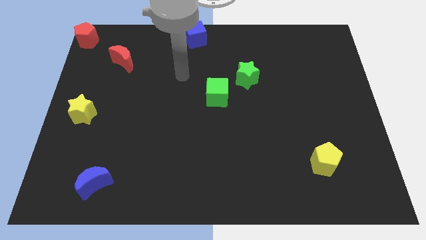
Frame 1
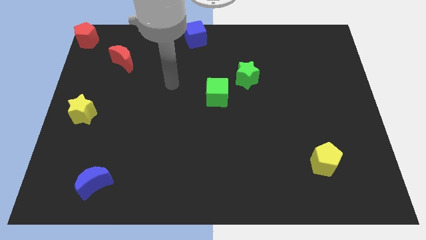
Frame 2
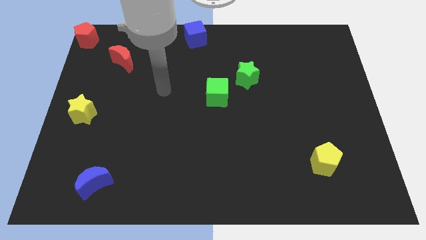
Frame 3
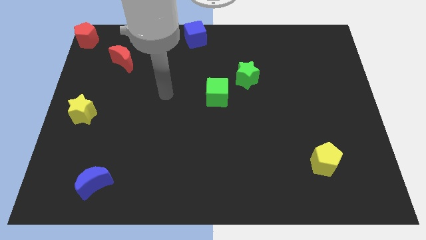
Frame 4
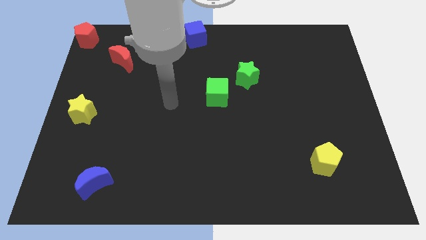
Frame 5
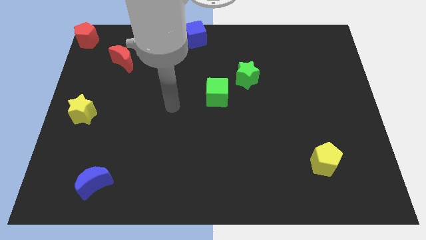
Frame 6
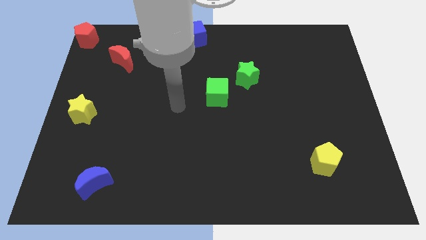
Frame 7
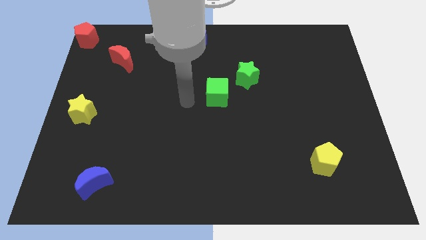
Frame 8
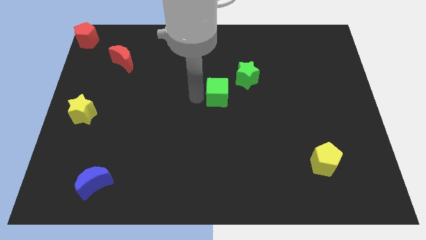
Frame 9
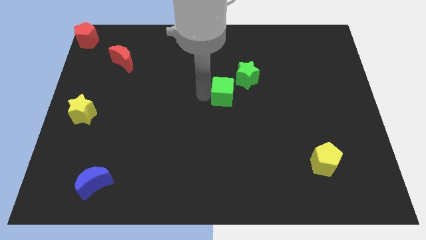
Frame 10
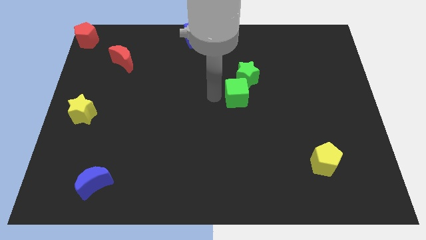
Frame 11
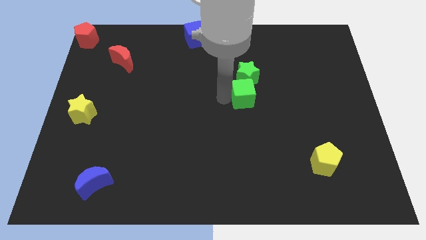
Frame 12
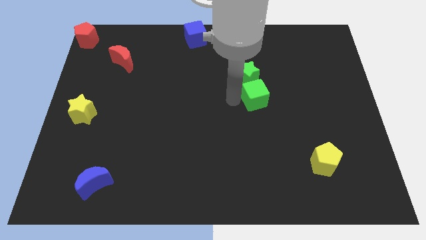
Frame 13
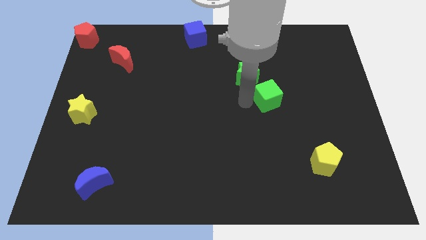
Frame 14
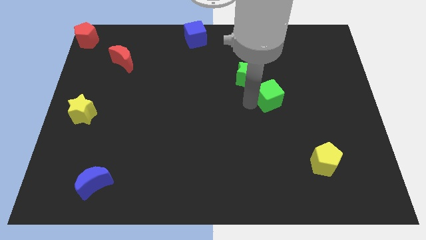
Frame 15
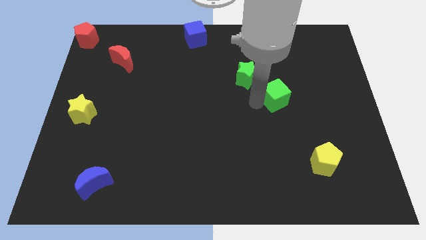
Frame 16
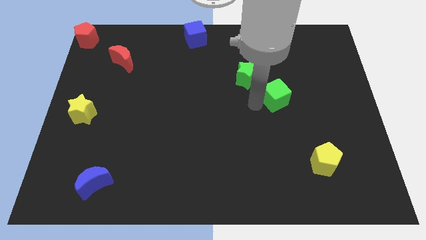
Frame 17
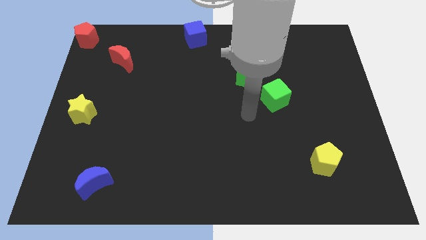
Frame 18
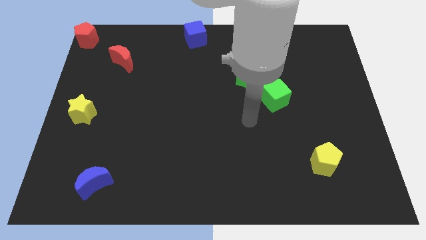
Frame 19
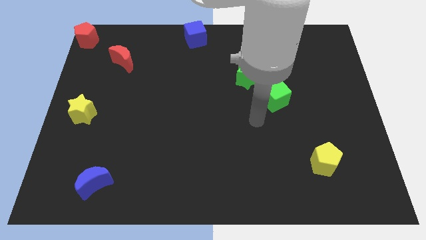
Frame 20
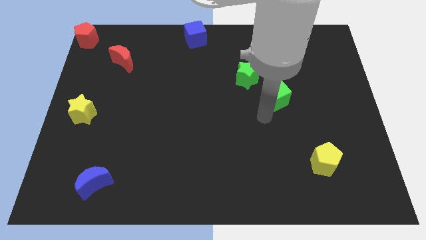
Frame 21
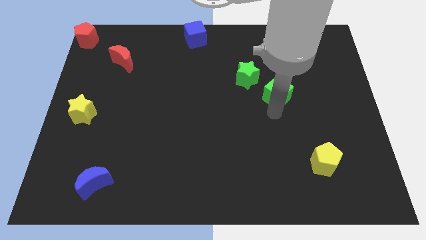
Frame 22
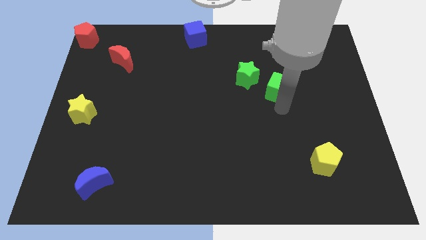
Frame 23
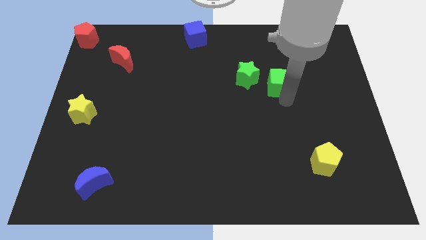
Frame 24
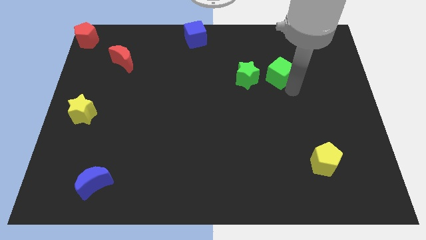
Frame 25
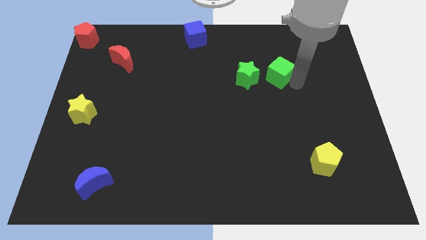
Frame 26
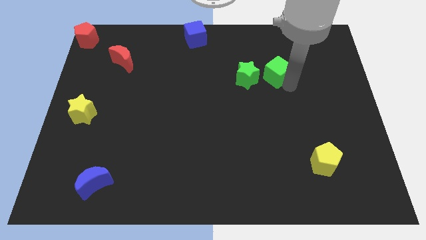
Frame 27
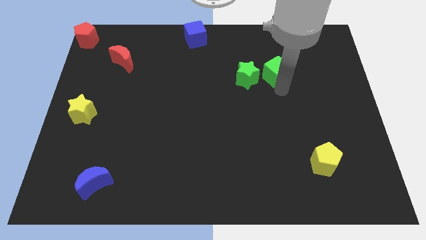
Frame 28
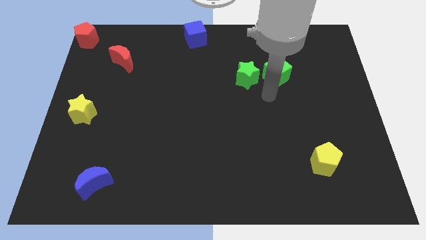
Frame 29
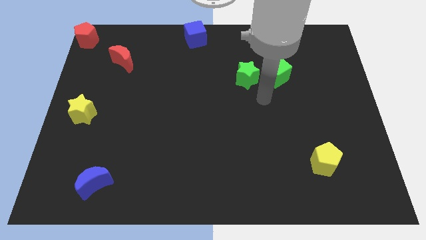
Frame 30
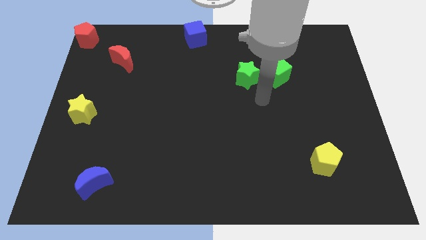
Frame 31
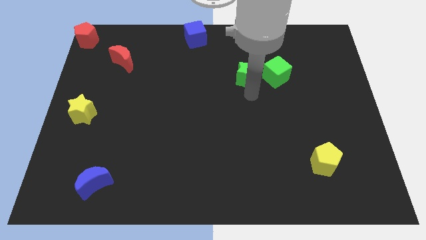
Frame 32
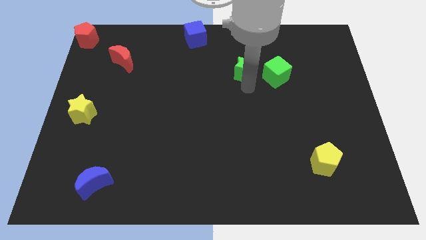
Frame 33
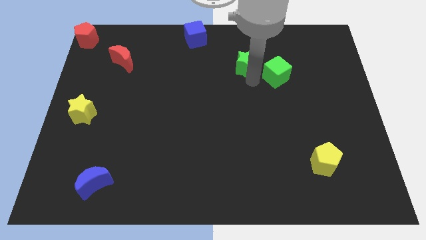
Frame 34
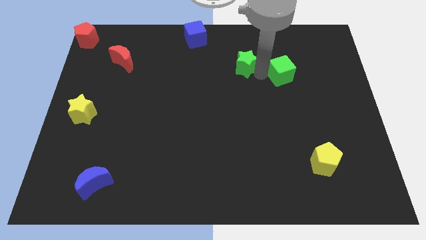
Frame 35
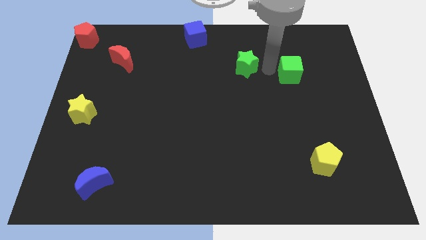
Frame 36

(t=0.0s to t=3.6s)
place your hand in between the green blocks

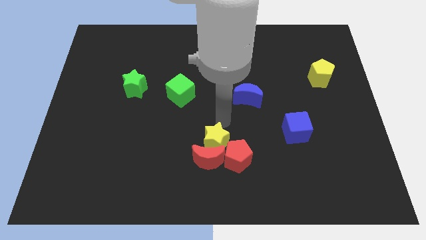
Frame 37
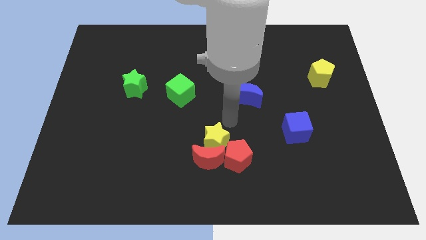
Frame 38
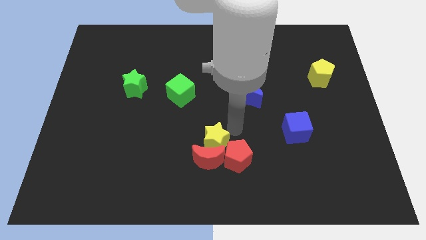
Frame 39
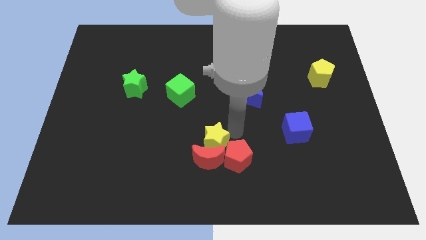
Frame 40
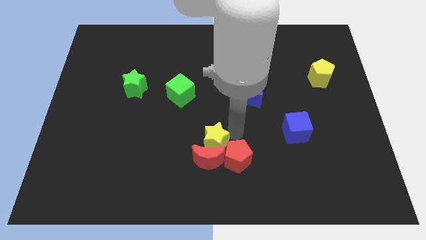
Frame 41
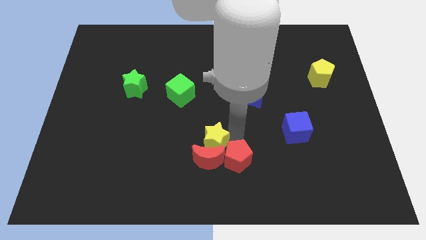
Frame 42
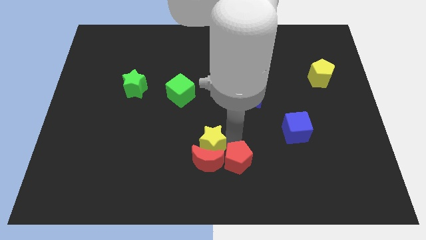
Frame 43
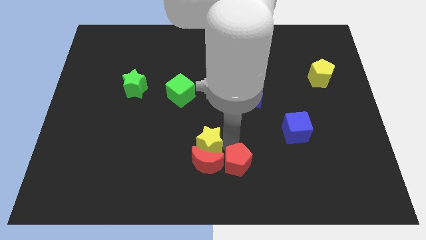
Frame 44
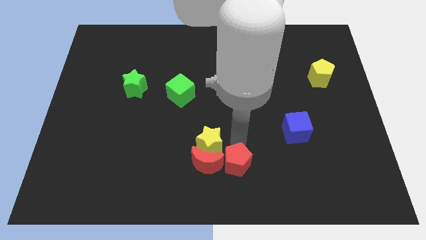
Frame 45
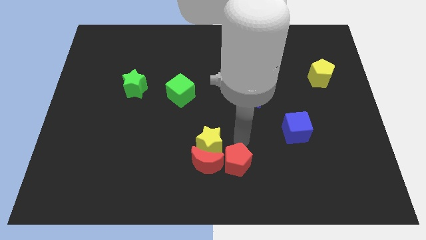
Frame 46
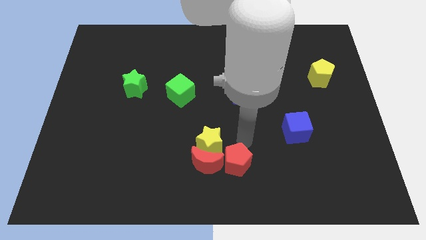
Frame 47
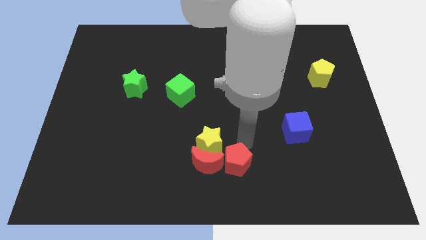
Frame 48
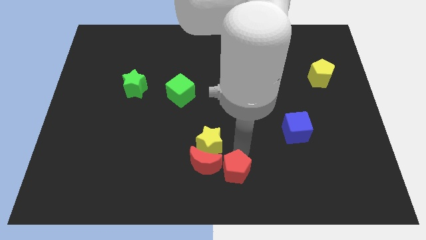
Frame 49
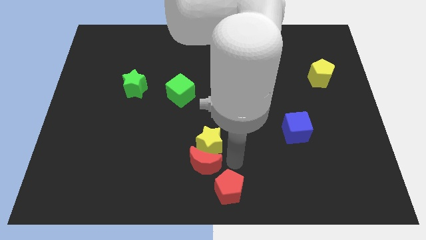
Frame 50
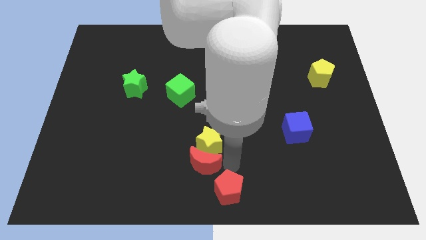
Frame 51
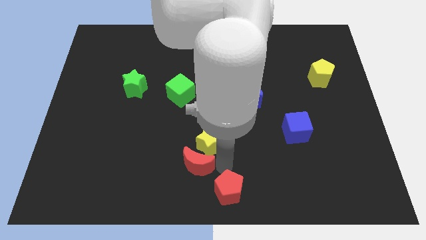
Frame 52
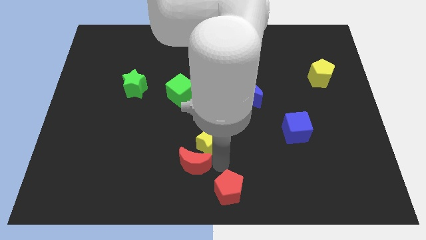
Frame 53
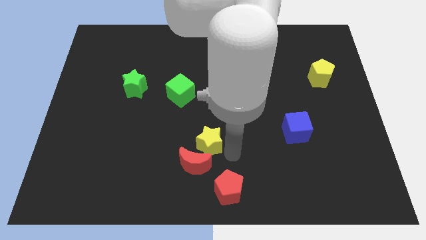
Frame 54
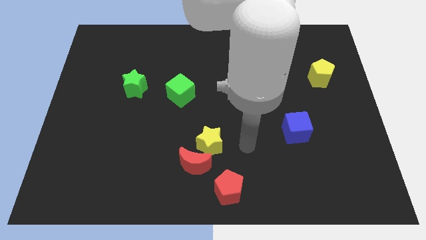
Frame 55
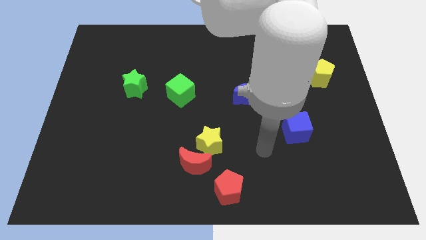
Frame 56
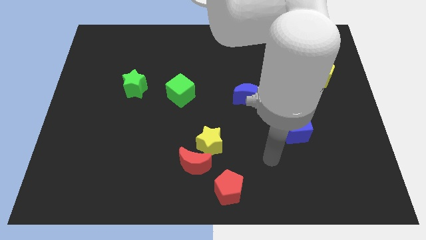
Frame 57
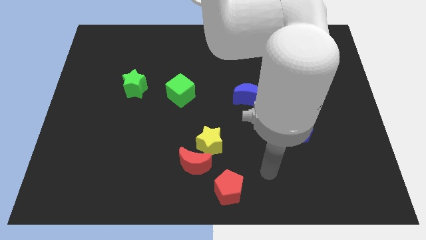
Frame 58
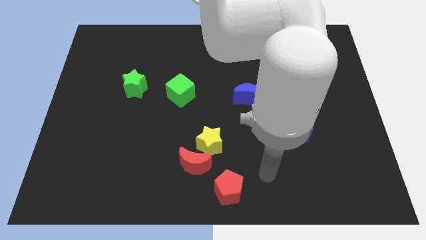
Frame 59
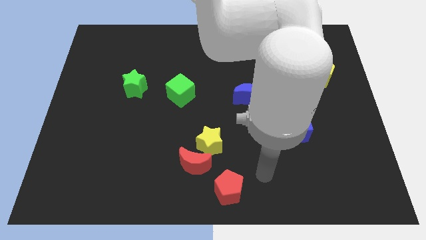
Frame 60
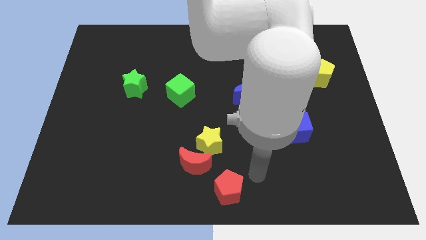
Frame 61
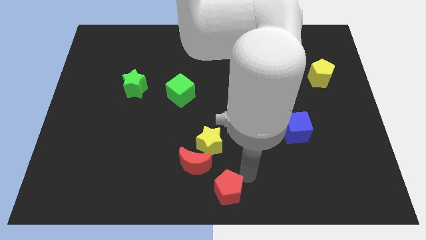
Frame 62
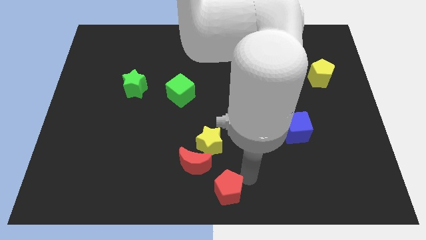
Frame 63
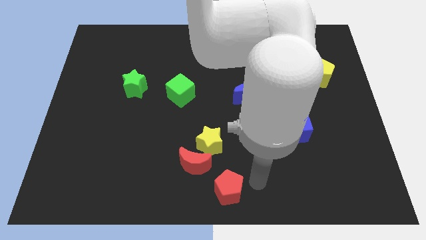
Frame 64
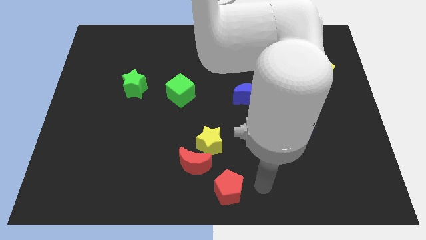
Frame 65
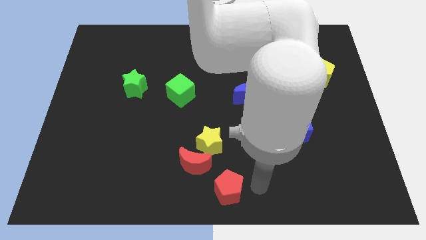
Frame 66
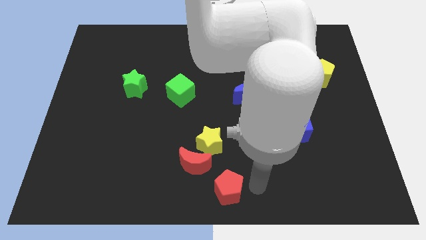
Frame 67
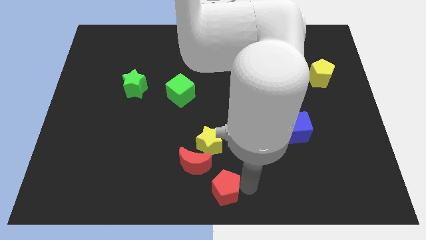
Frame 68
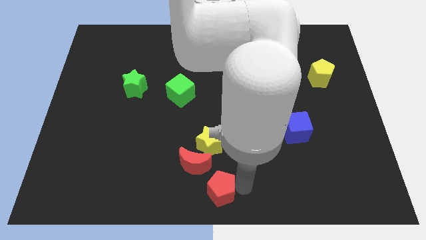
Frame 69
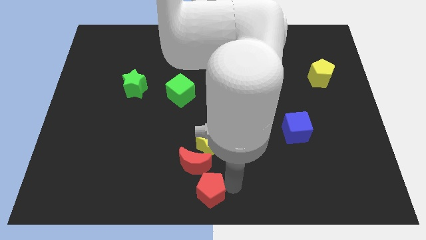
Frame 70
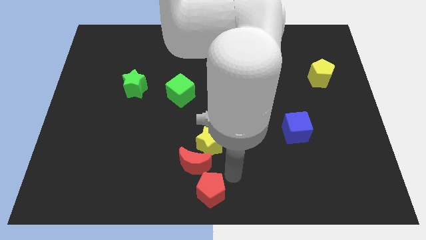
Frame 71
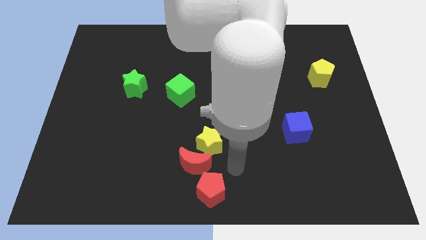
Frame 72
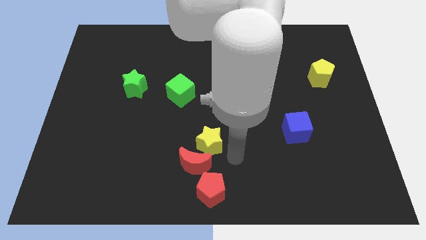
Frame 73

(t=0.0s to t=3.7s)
separate the group of blocks

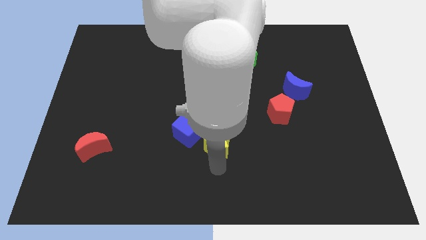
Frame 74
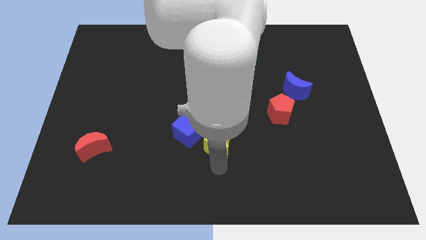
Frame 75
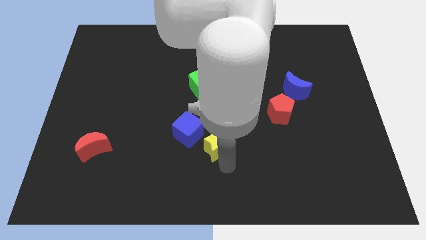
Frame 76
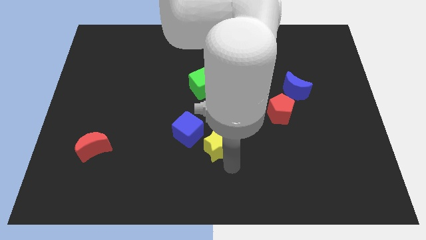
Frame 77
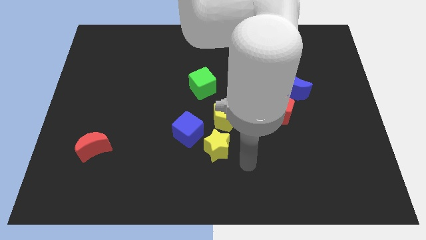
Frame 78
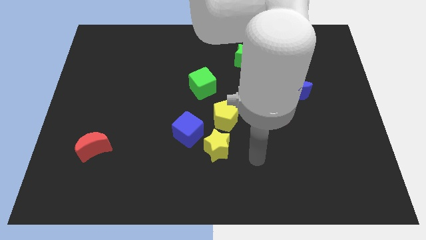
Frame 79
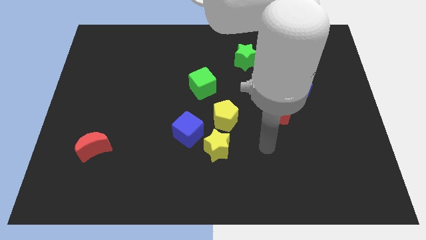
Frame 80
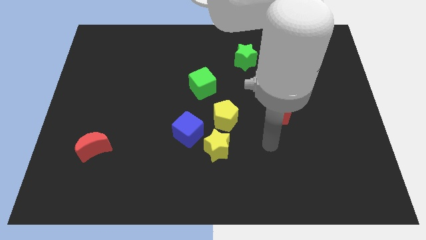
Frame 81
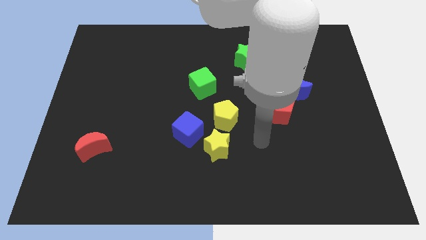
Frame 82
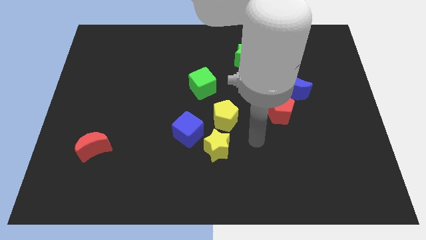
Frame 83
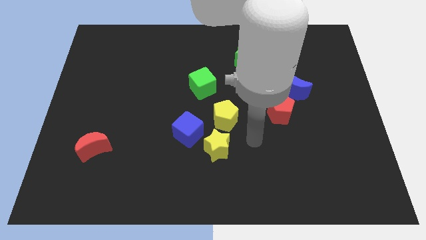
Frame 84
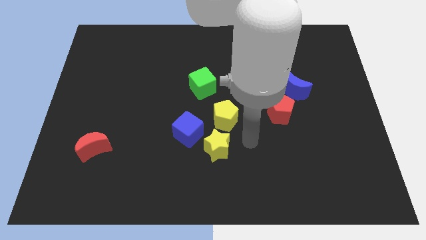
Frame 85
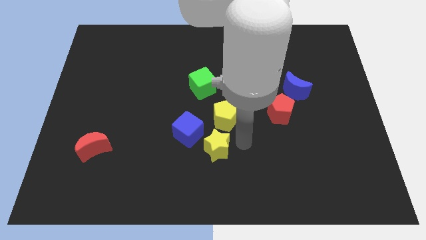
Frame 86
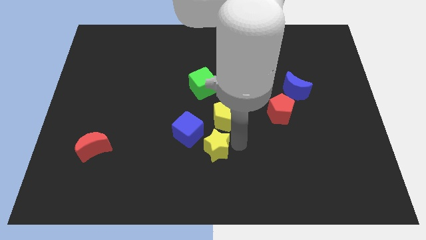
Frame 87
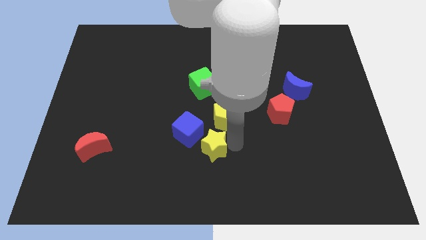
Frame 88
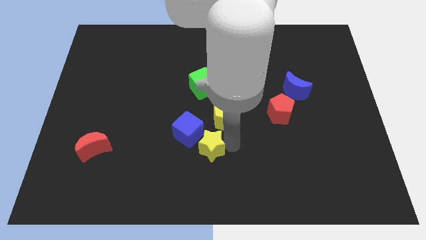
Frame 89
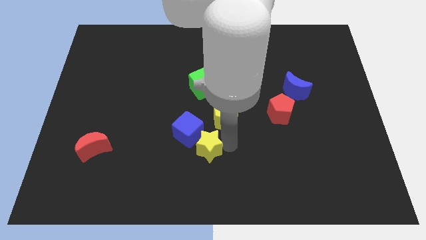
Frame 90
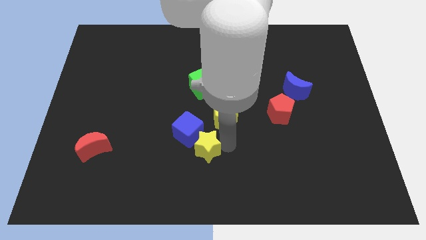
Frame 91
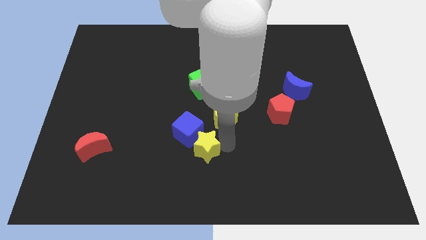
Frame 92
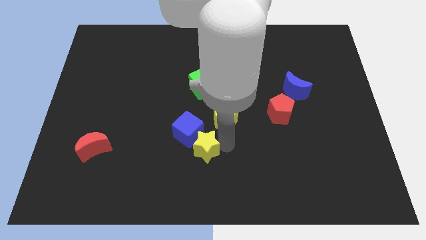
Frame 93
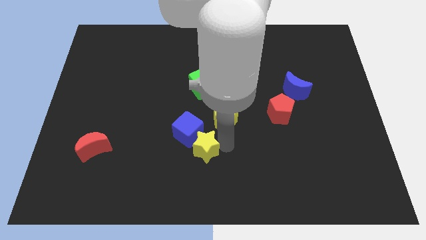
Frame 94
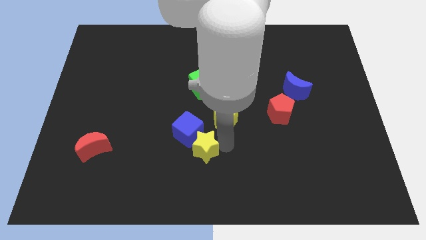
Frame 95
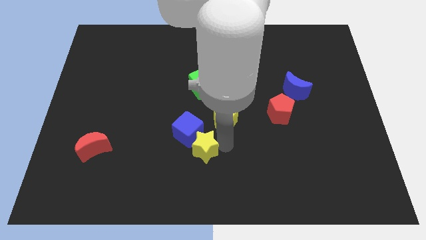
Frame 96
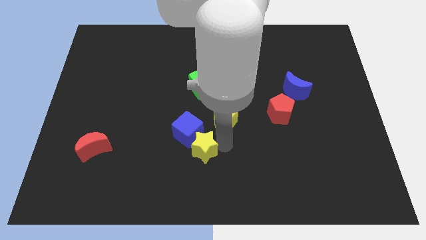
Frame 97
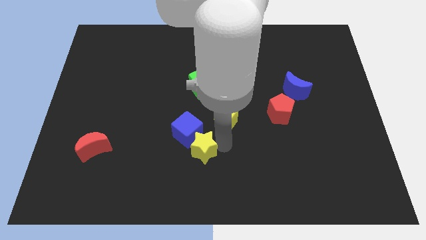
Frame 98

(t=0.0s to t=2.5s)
move the yellow star into the blue cube
